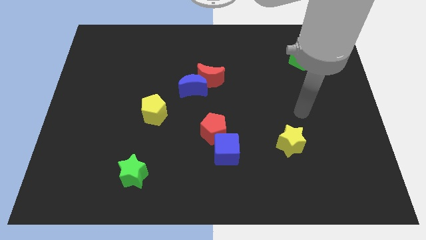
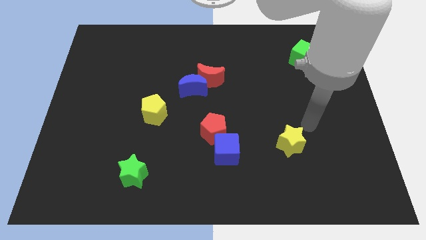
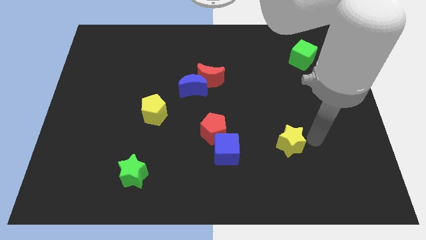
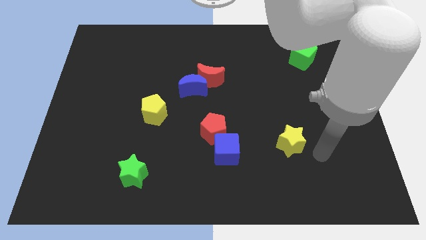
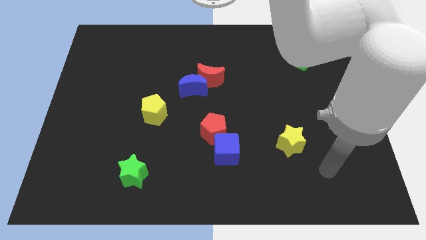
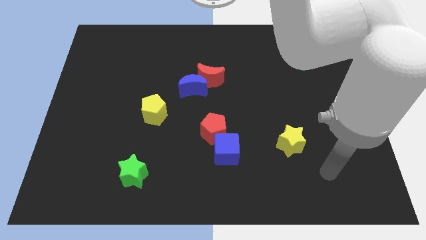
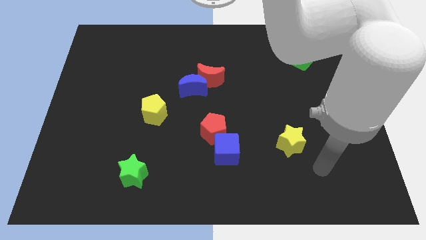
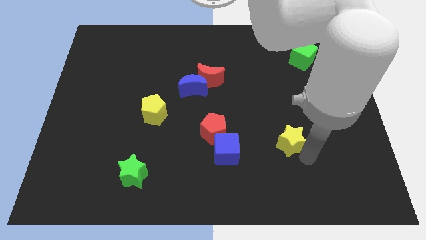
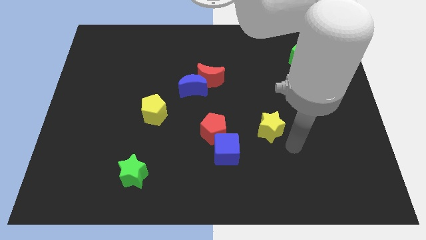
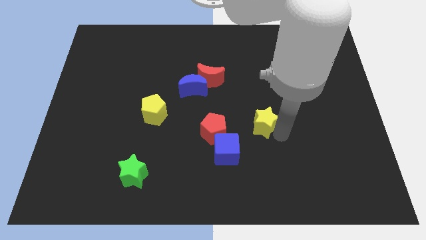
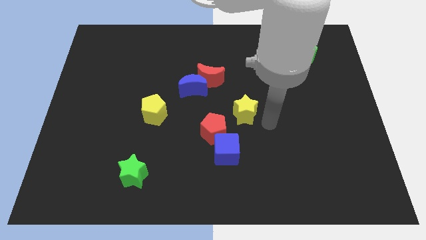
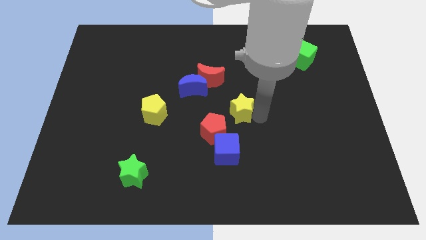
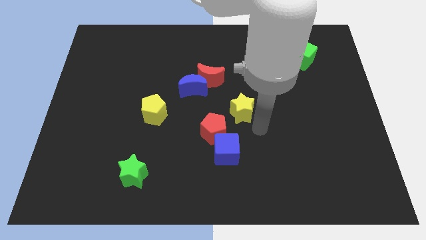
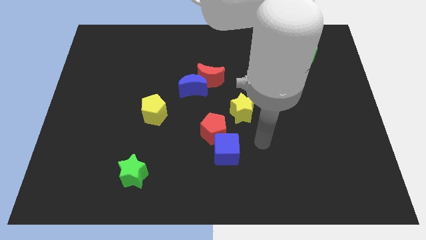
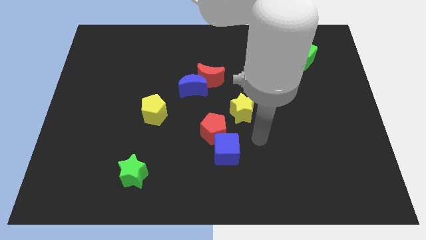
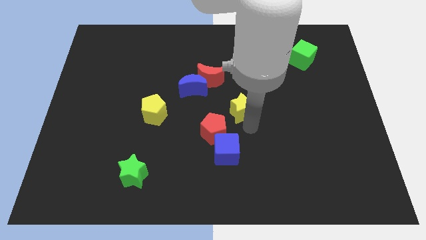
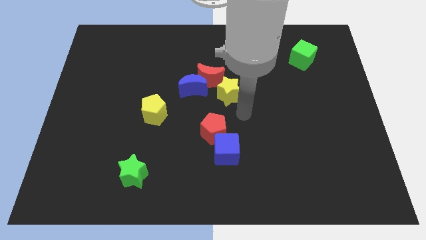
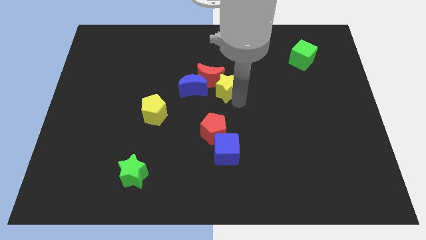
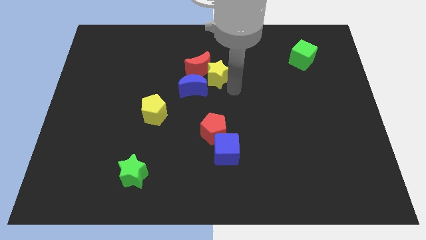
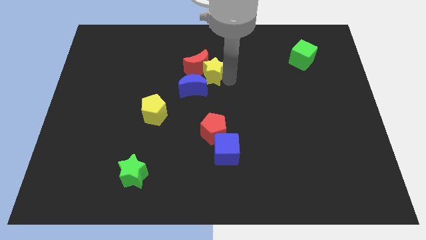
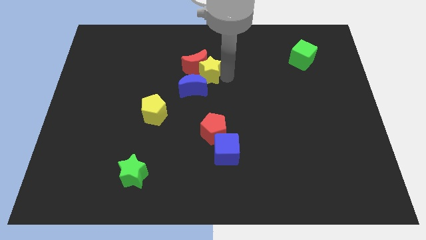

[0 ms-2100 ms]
place yellow star close to red crescent

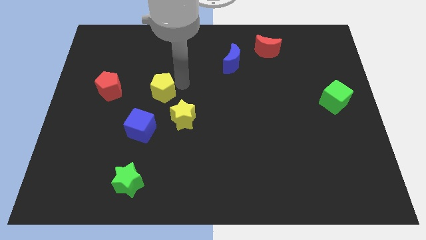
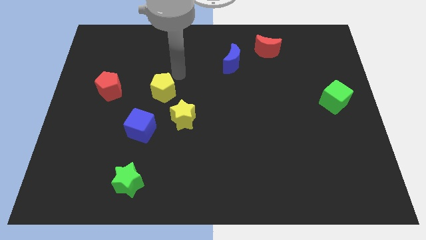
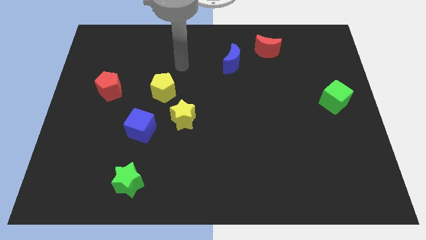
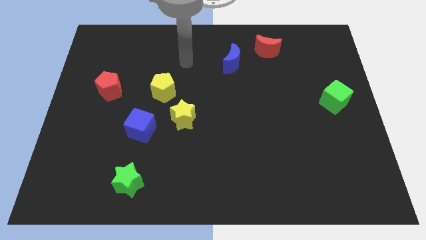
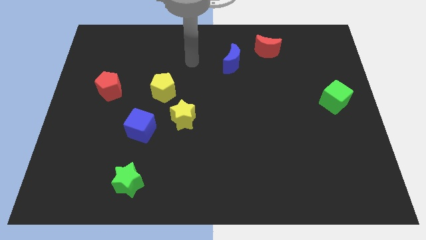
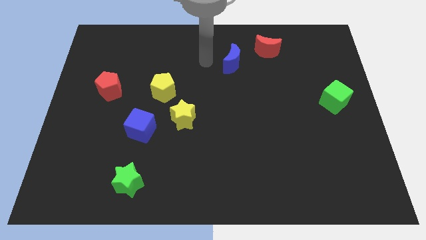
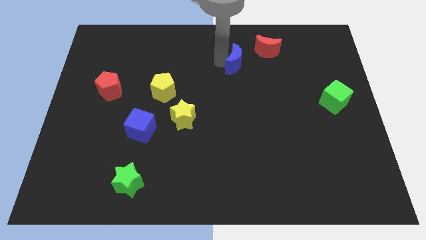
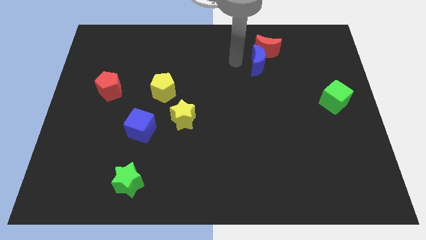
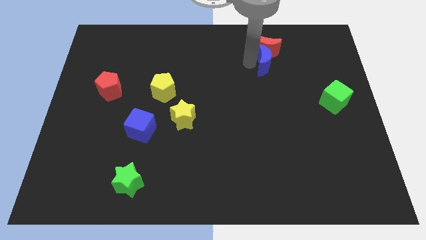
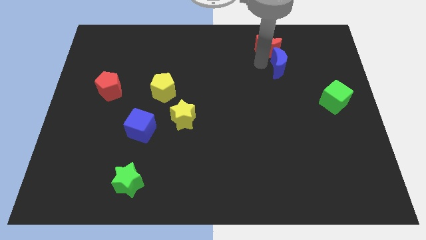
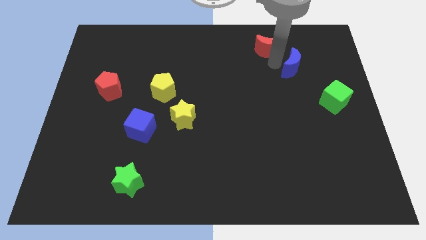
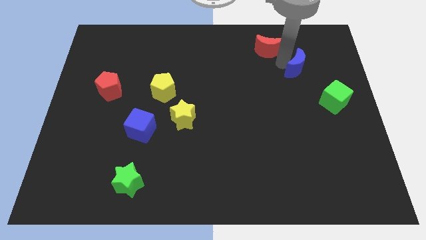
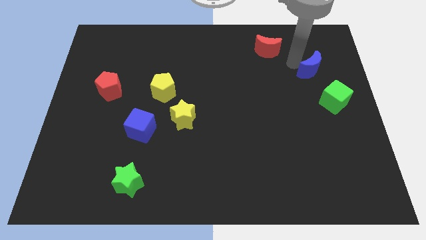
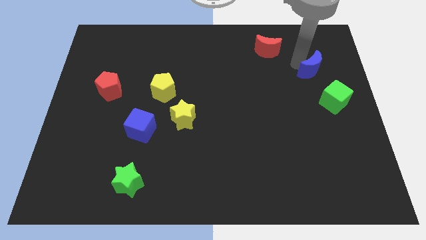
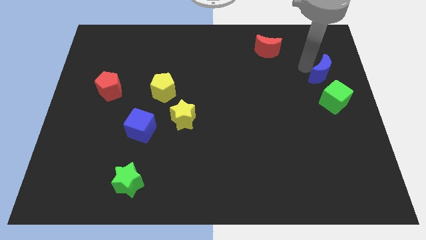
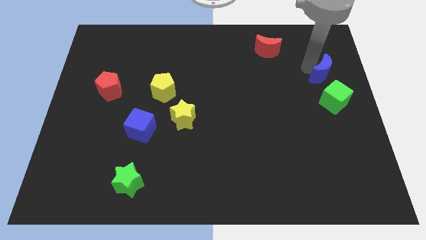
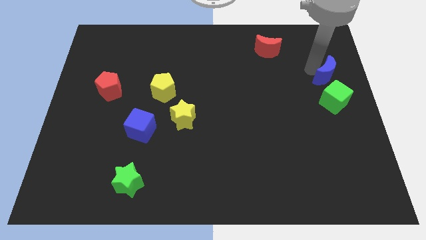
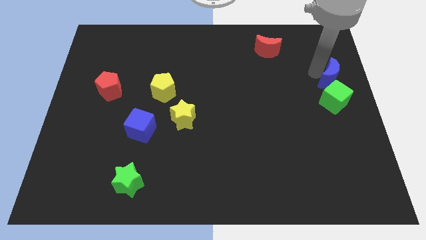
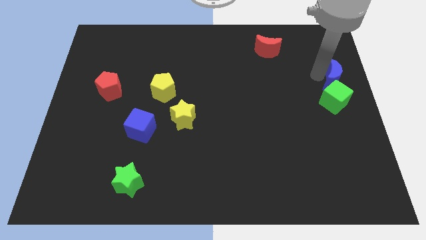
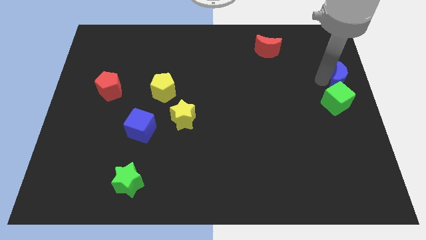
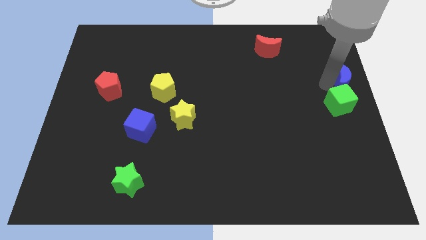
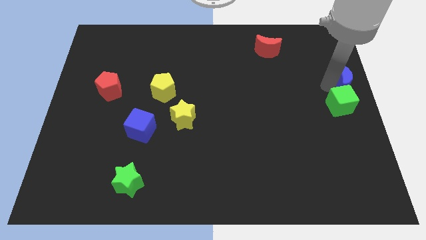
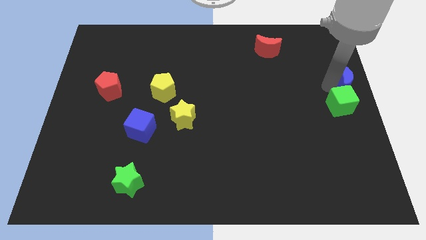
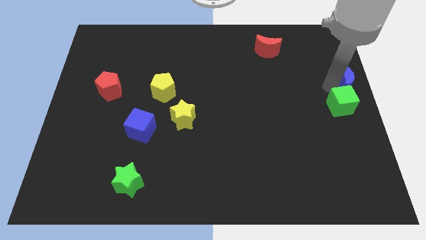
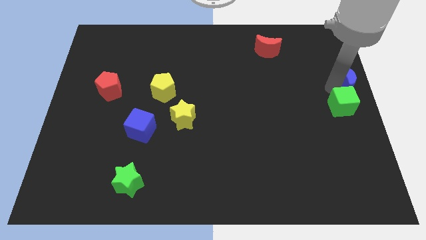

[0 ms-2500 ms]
move the blue crescent to the top of the green cube

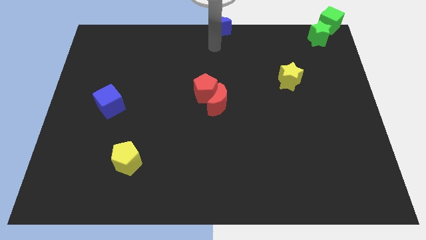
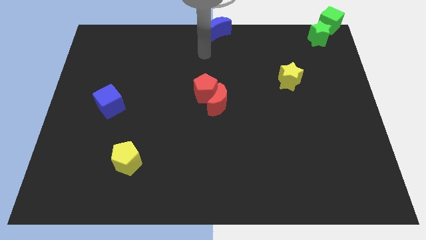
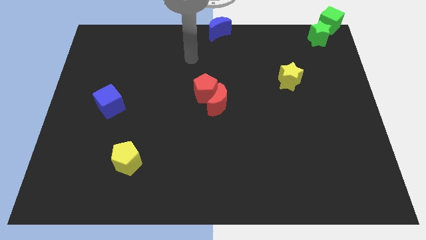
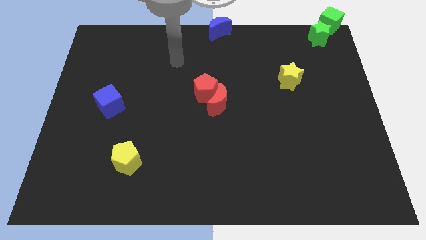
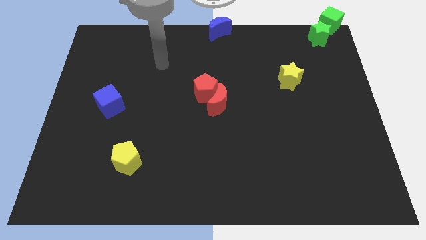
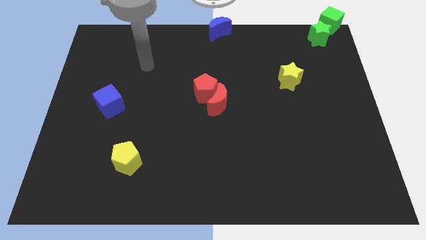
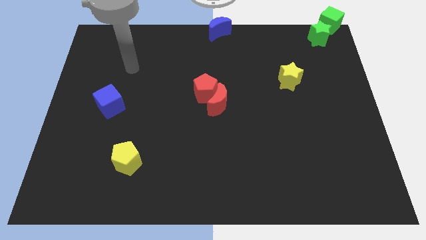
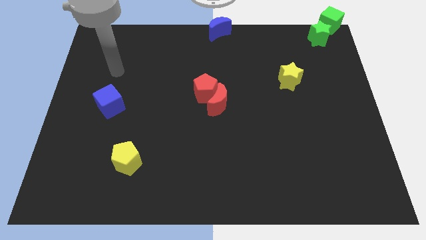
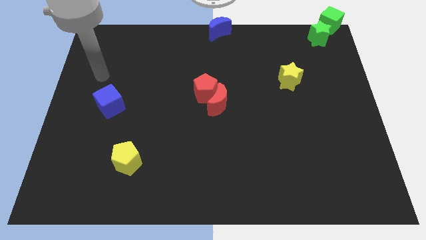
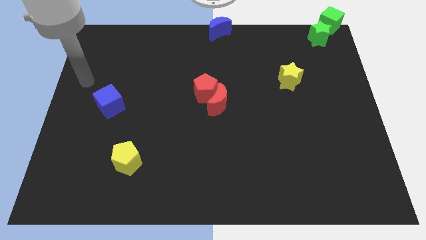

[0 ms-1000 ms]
move the arm away from the blue moon

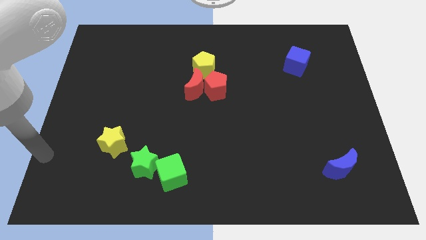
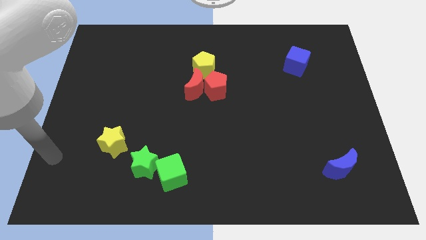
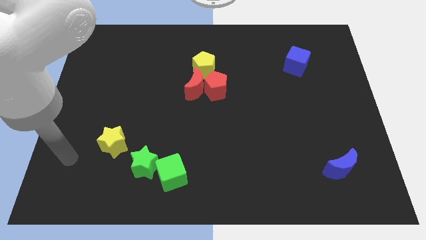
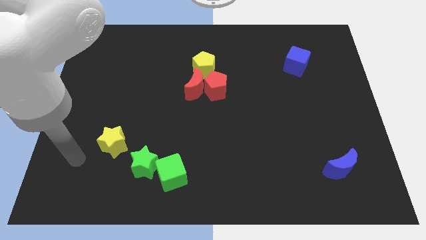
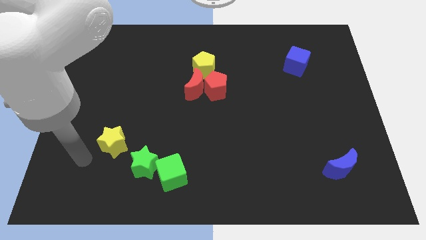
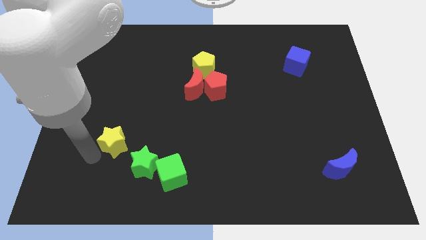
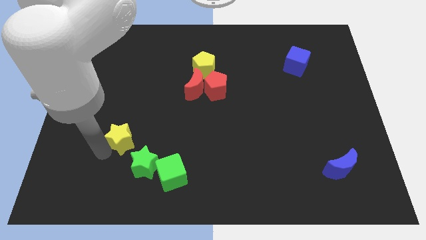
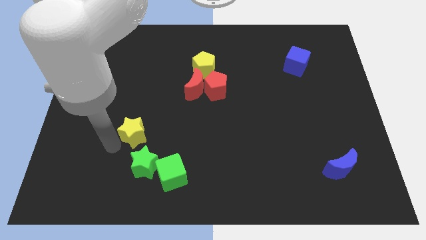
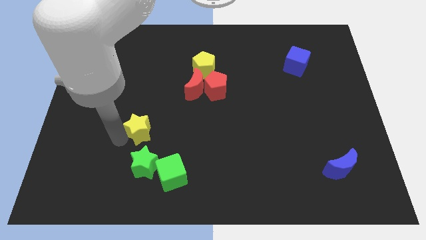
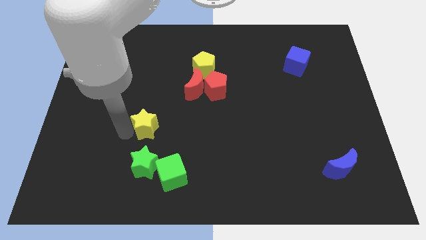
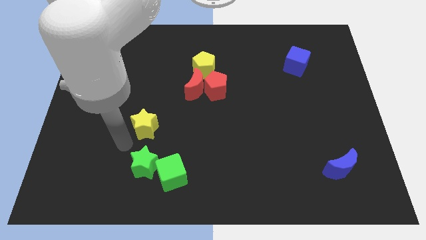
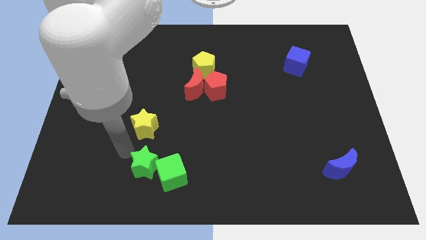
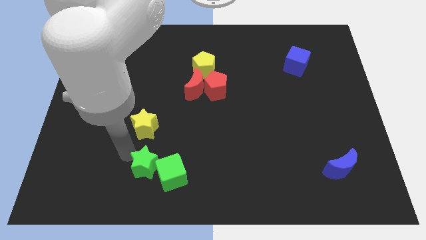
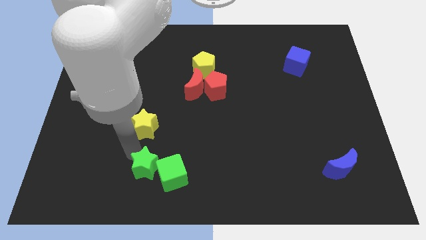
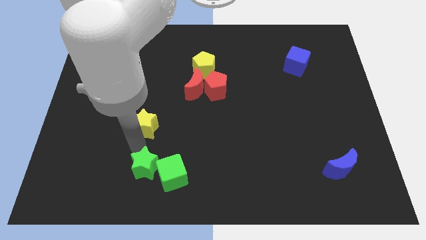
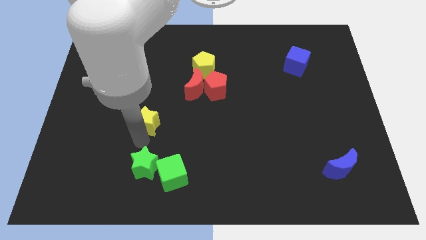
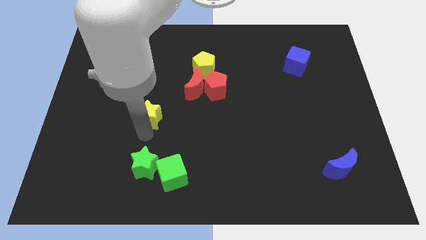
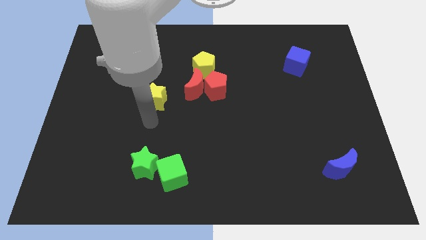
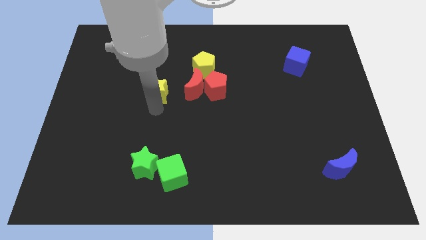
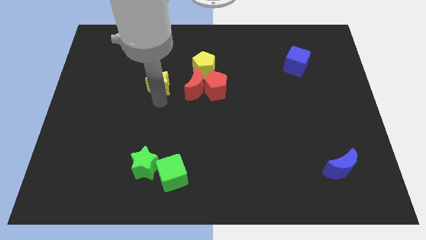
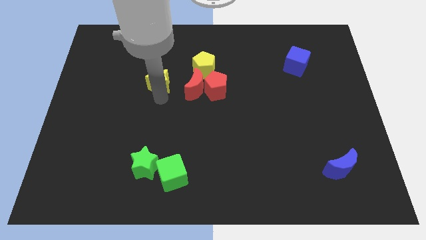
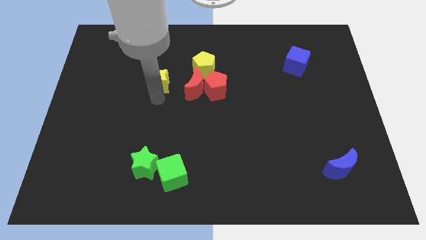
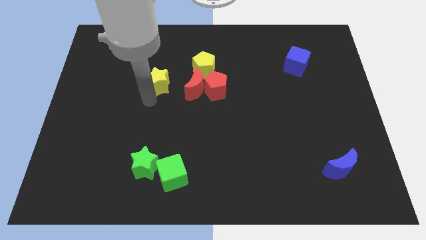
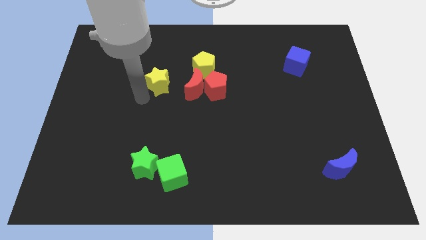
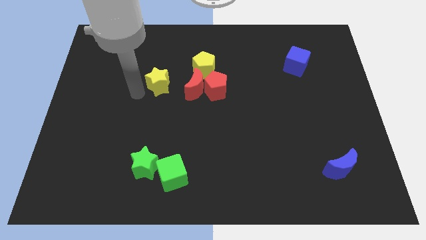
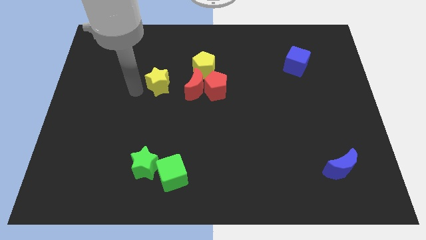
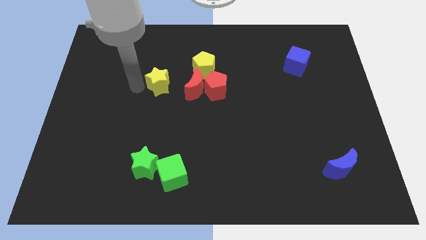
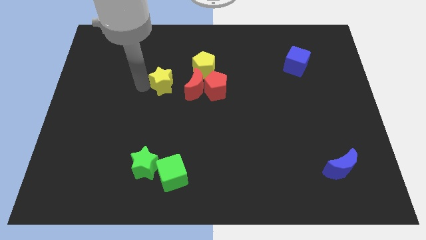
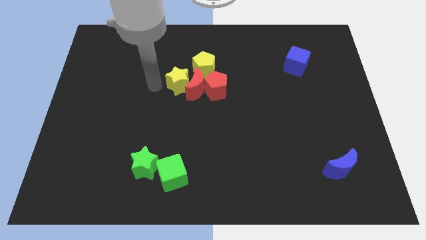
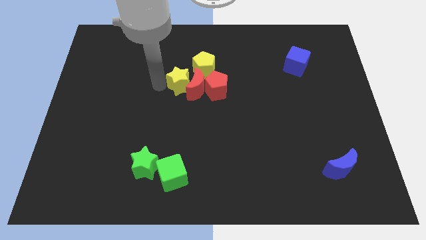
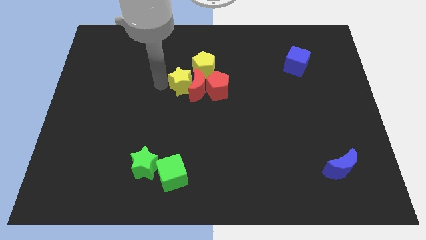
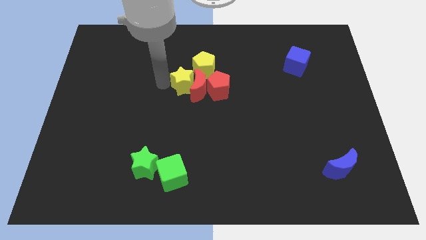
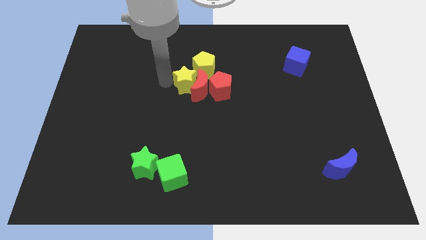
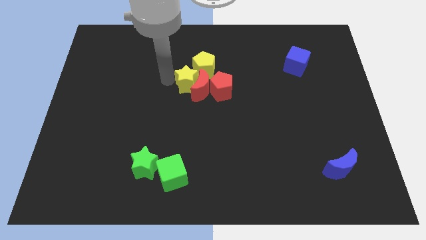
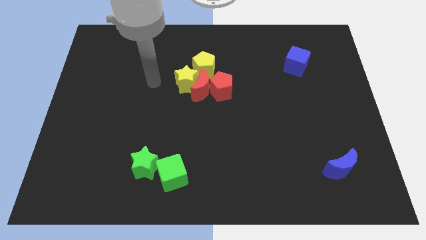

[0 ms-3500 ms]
move yellow star towards the red crescent
